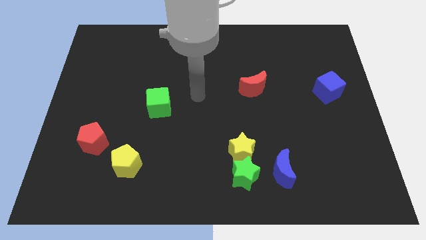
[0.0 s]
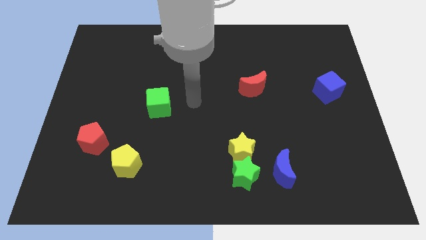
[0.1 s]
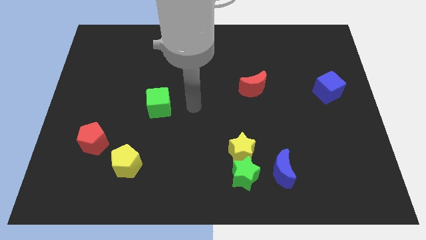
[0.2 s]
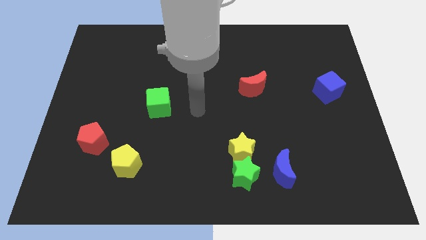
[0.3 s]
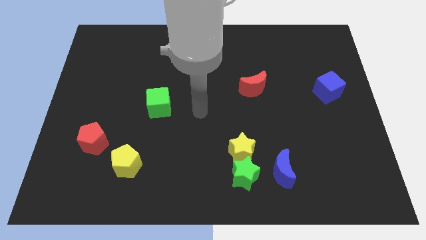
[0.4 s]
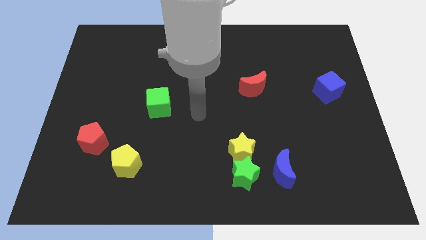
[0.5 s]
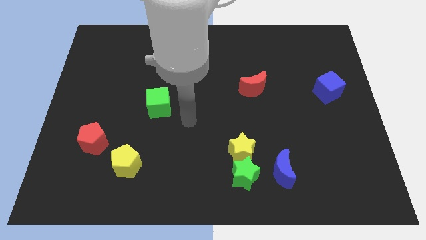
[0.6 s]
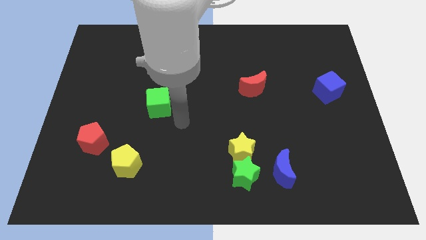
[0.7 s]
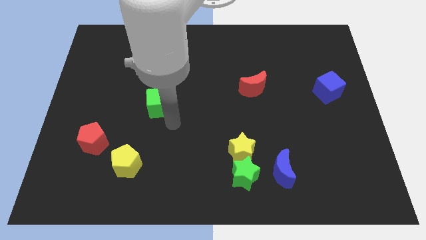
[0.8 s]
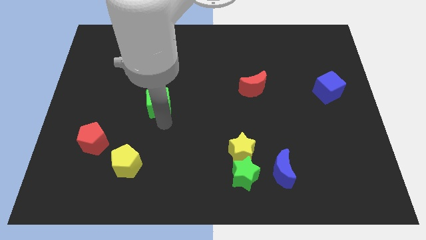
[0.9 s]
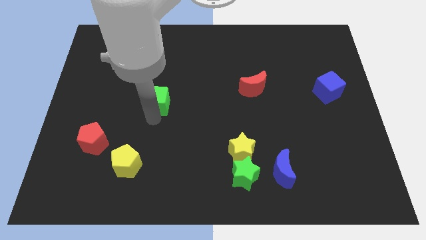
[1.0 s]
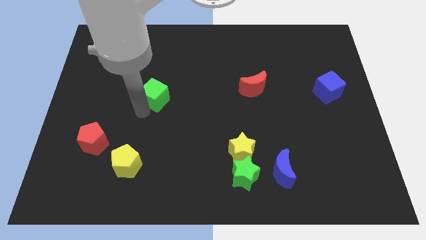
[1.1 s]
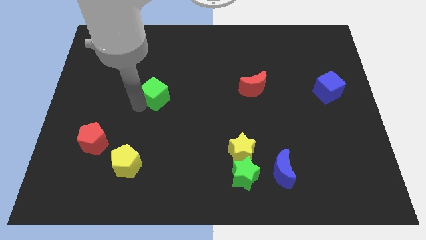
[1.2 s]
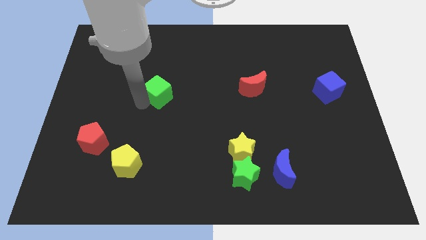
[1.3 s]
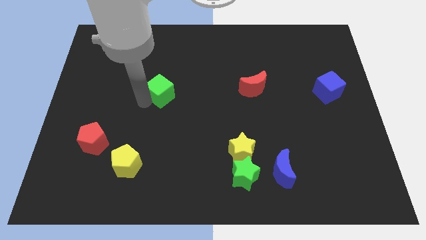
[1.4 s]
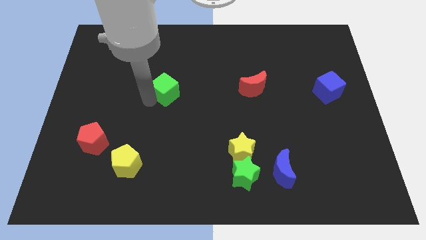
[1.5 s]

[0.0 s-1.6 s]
move green cube upwards

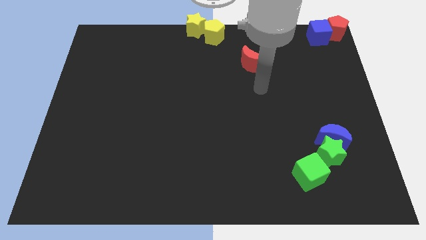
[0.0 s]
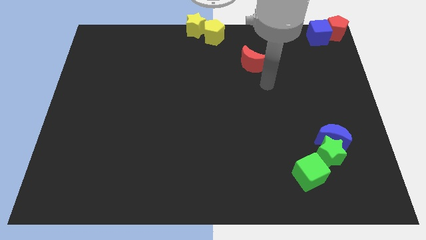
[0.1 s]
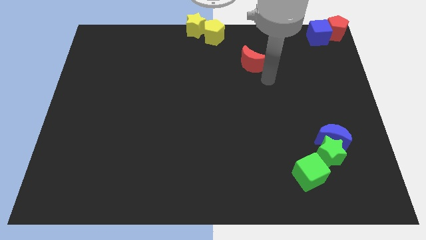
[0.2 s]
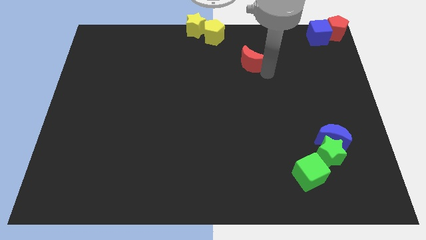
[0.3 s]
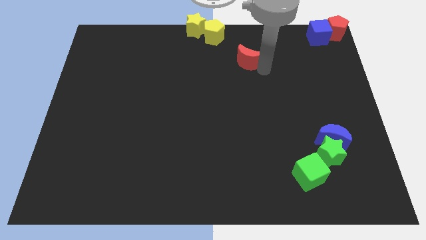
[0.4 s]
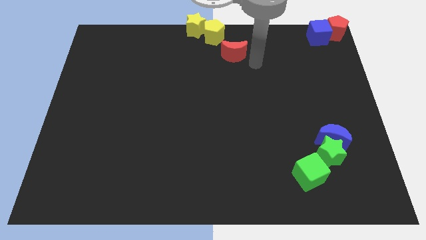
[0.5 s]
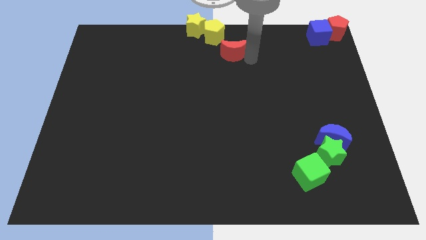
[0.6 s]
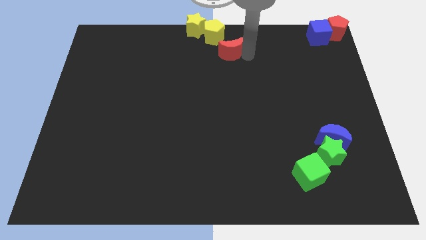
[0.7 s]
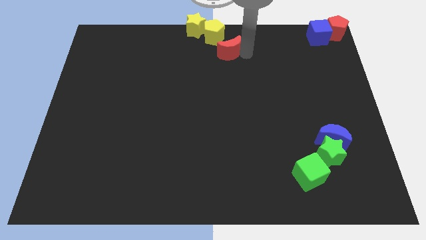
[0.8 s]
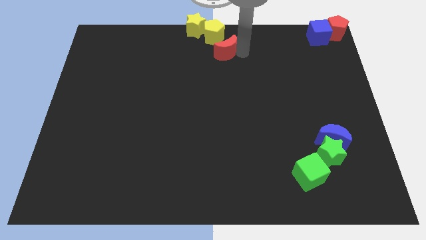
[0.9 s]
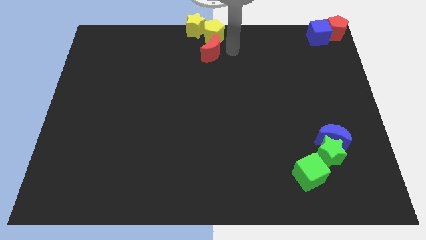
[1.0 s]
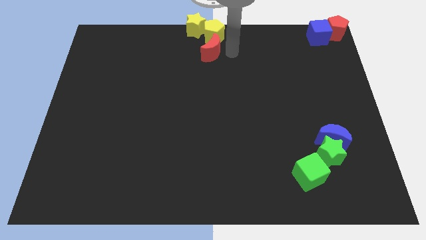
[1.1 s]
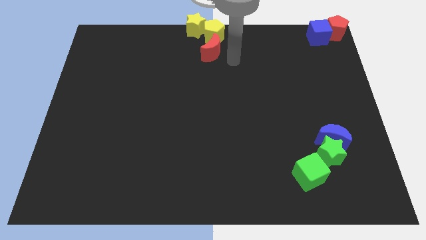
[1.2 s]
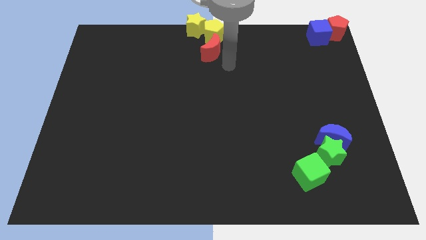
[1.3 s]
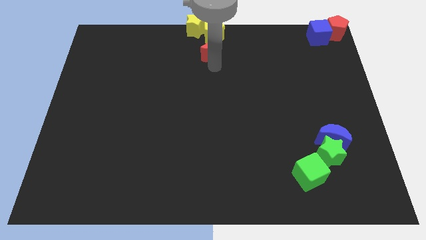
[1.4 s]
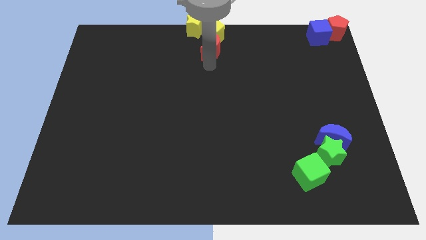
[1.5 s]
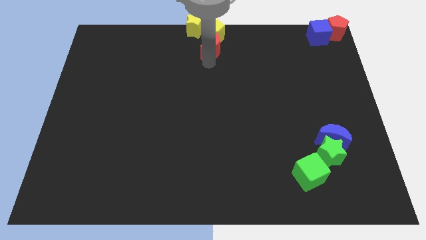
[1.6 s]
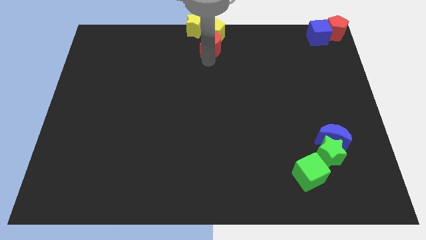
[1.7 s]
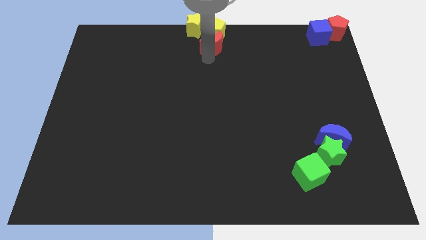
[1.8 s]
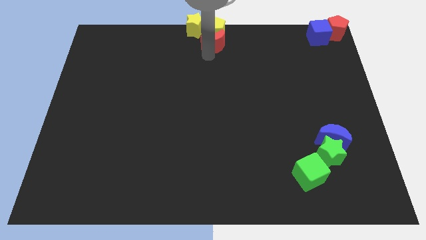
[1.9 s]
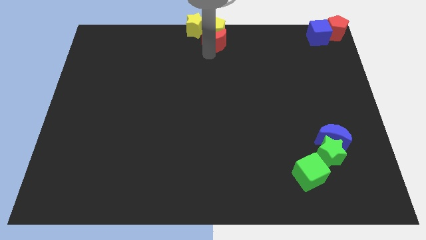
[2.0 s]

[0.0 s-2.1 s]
push the red moon into yellow pentagon

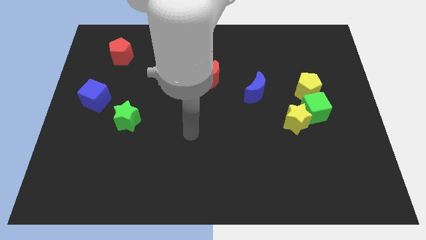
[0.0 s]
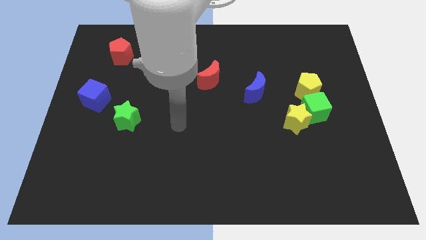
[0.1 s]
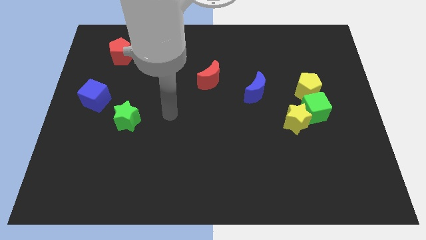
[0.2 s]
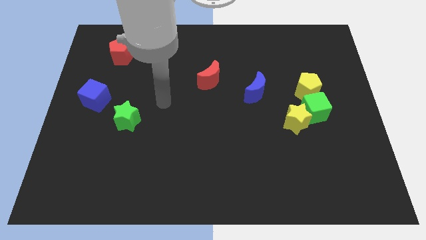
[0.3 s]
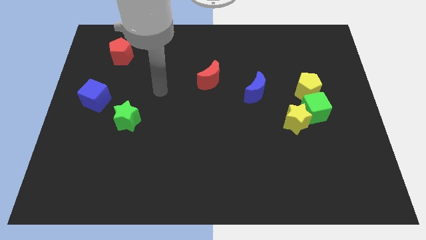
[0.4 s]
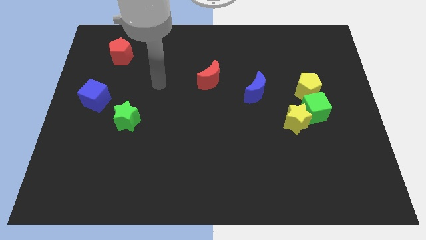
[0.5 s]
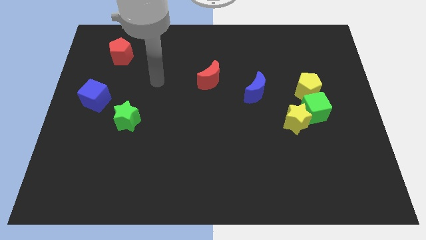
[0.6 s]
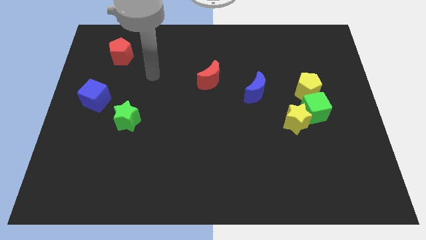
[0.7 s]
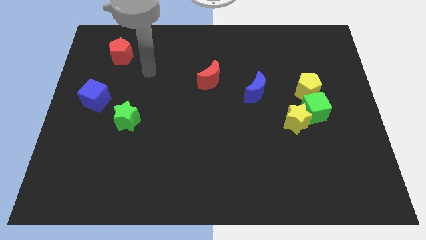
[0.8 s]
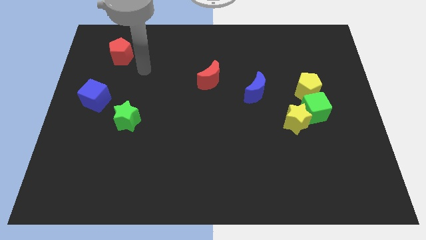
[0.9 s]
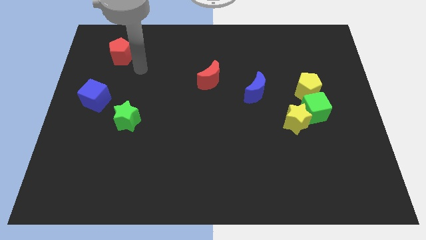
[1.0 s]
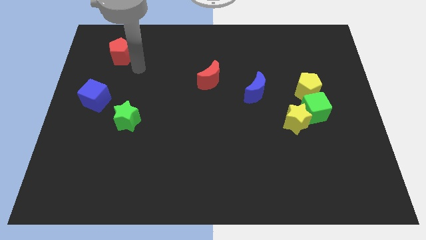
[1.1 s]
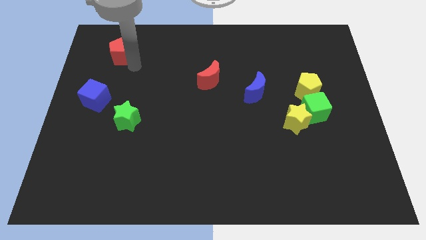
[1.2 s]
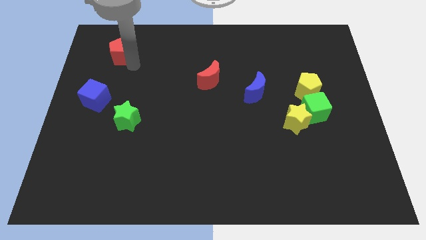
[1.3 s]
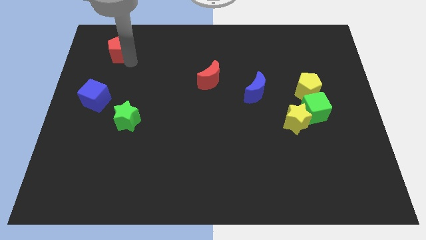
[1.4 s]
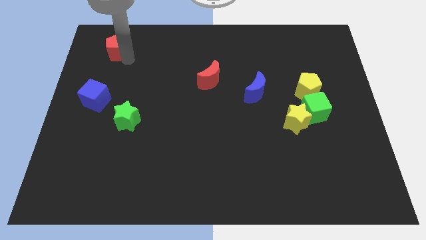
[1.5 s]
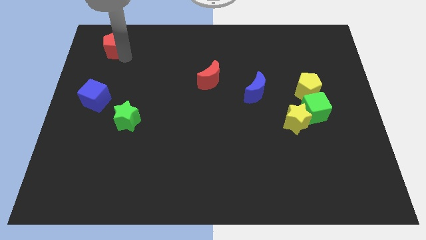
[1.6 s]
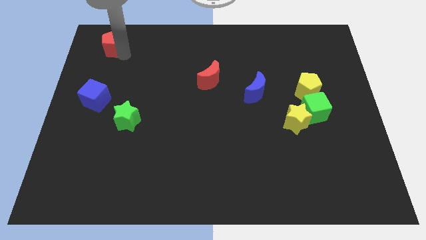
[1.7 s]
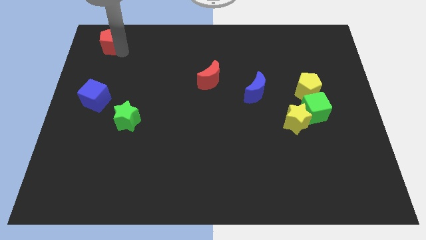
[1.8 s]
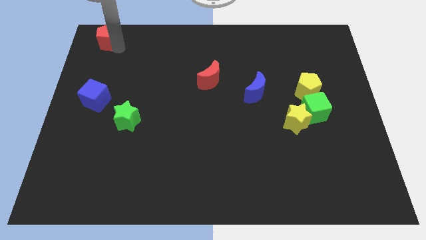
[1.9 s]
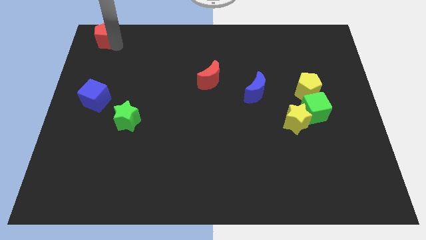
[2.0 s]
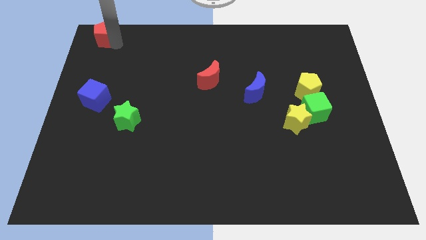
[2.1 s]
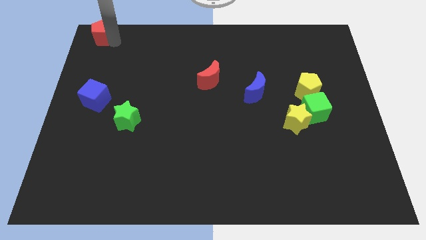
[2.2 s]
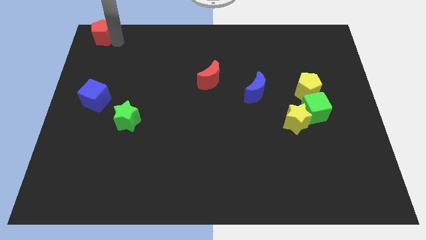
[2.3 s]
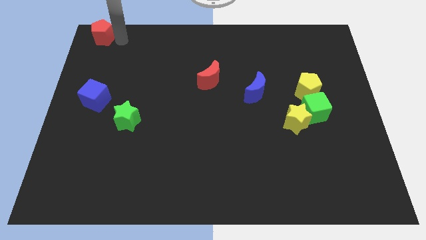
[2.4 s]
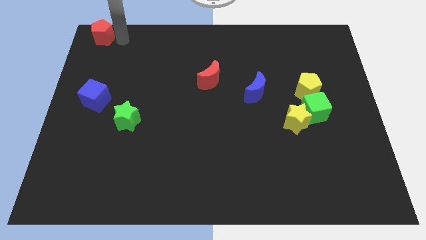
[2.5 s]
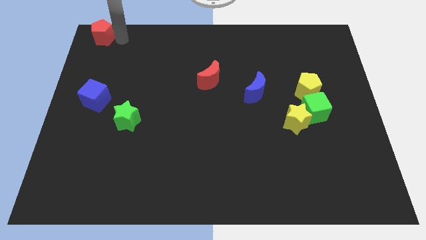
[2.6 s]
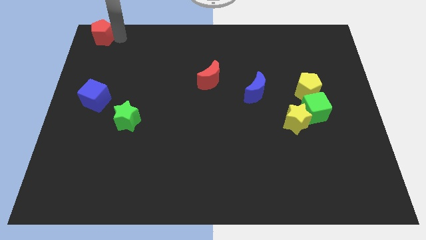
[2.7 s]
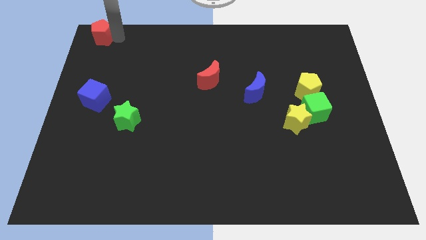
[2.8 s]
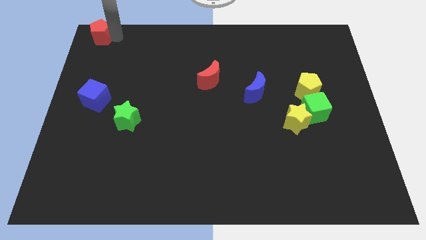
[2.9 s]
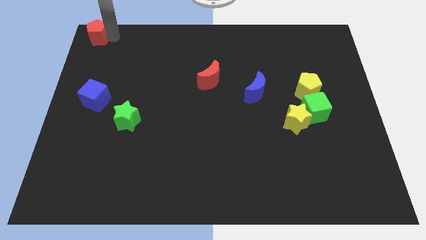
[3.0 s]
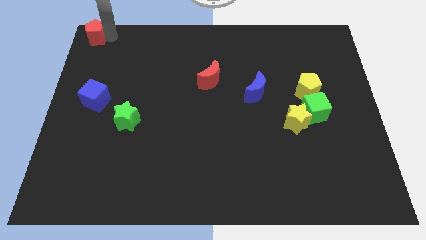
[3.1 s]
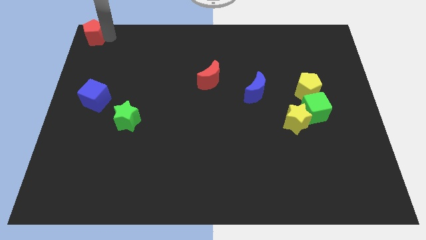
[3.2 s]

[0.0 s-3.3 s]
move red pentagon to the top left corner of the board

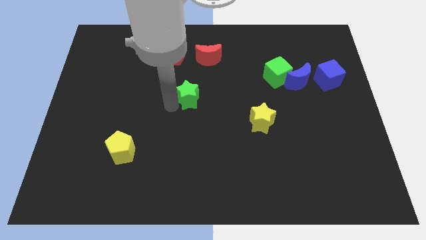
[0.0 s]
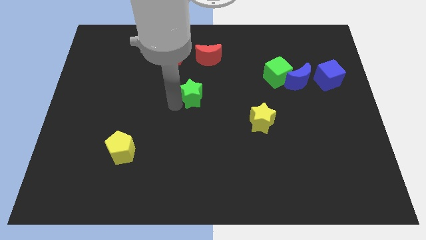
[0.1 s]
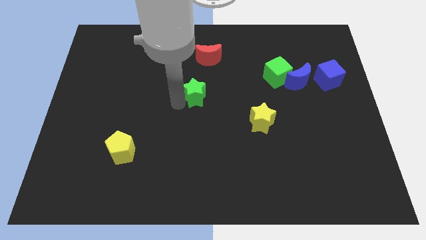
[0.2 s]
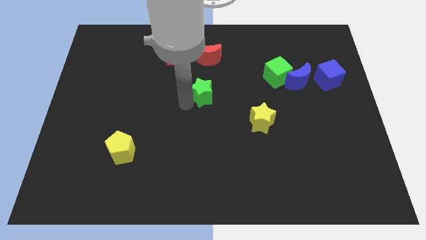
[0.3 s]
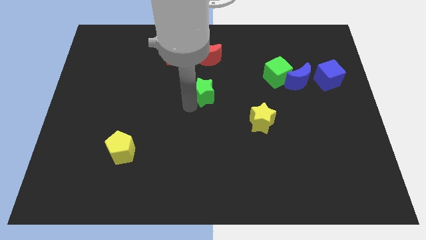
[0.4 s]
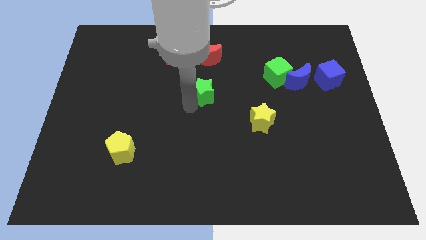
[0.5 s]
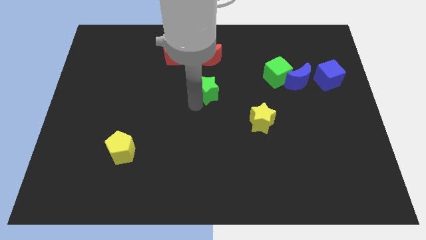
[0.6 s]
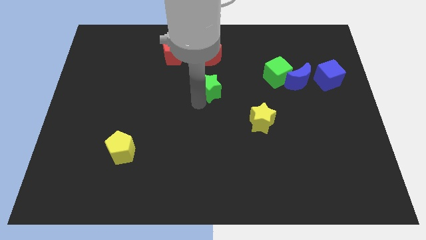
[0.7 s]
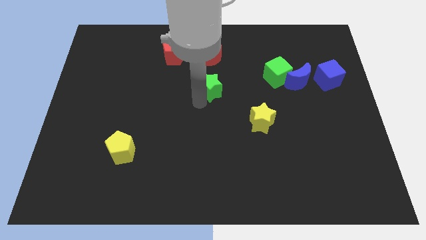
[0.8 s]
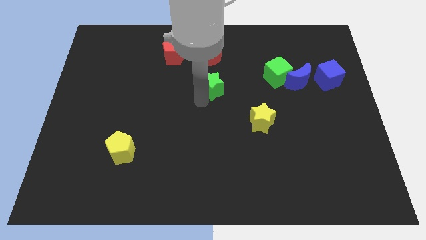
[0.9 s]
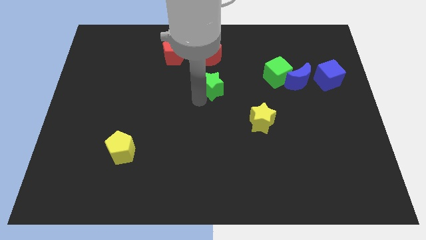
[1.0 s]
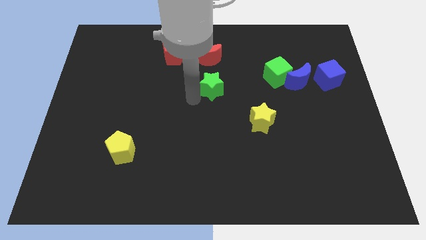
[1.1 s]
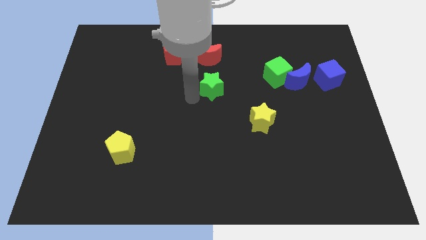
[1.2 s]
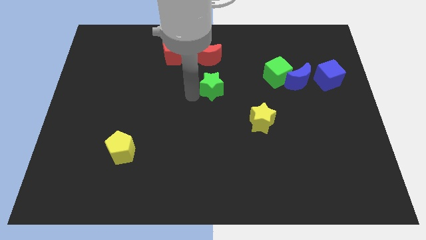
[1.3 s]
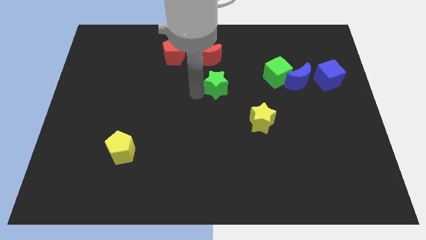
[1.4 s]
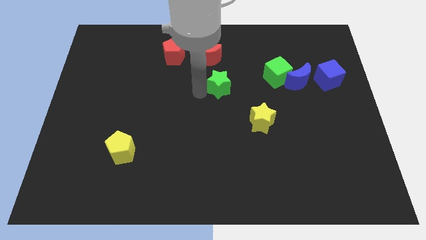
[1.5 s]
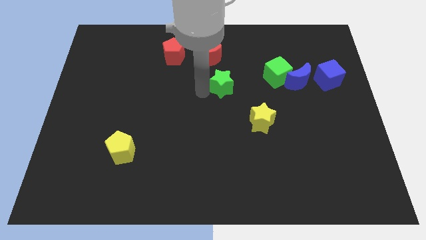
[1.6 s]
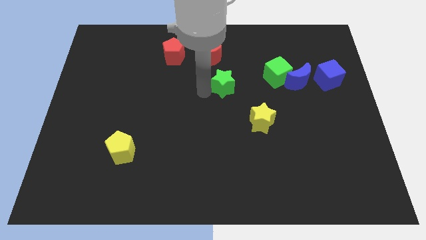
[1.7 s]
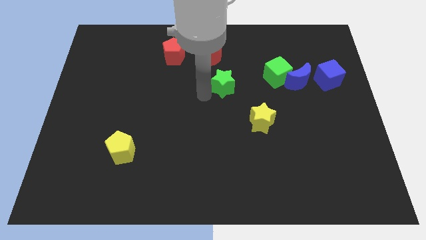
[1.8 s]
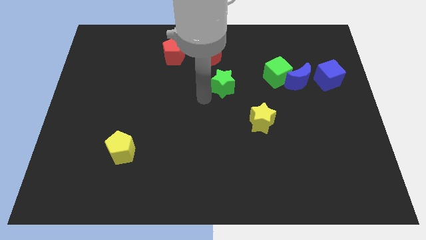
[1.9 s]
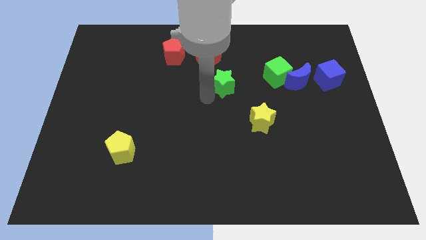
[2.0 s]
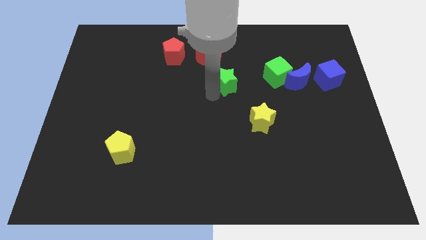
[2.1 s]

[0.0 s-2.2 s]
place the green star at the top left of the yellow star
